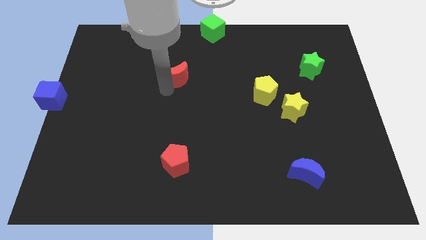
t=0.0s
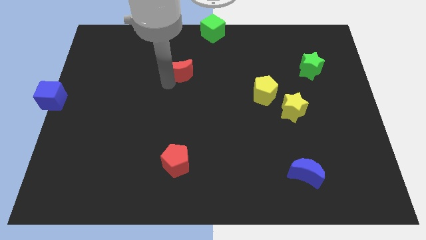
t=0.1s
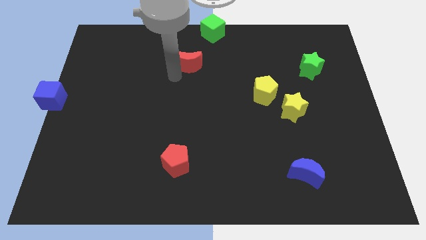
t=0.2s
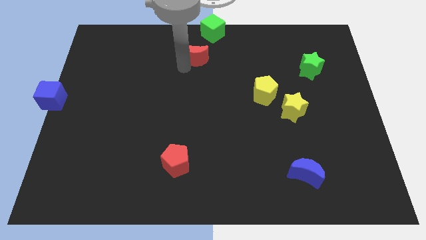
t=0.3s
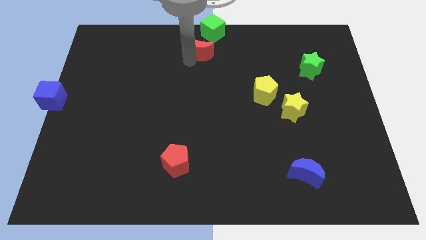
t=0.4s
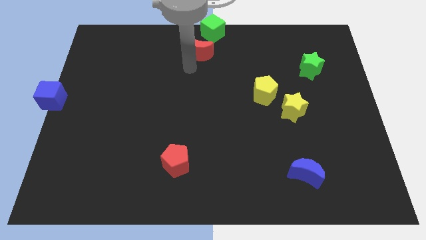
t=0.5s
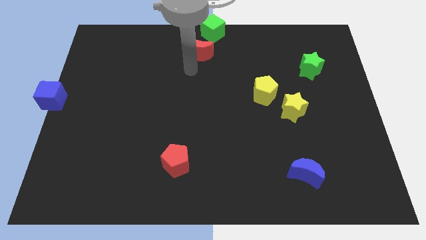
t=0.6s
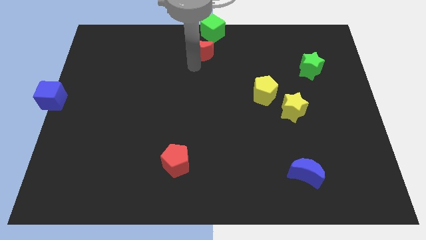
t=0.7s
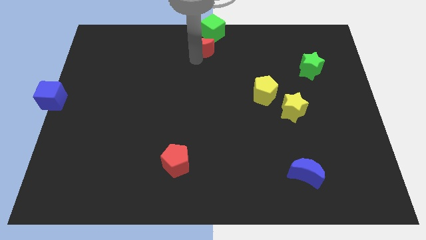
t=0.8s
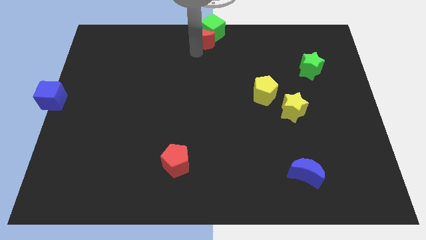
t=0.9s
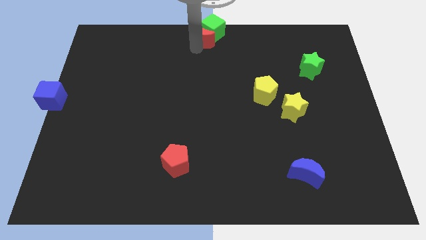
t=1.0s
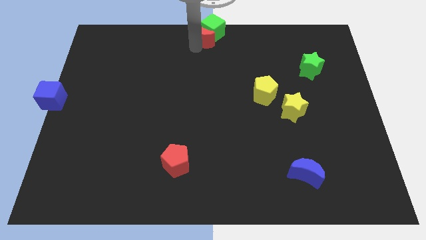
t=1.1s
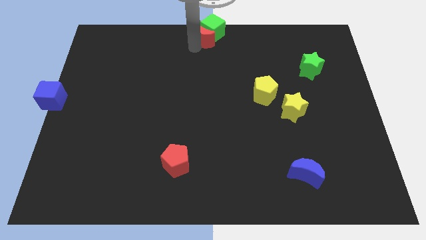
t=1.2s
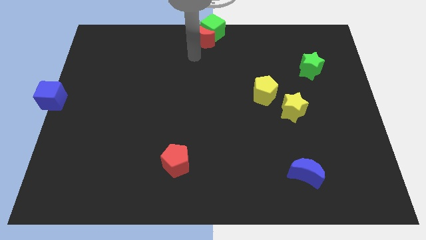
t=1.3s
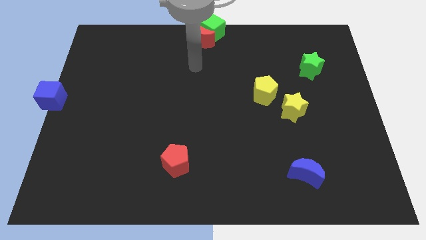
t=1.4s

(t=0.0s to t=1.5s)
move the red crescent into the green cube

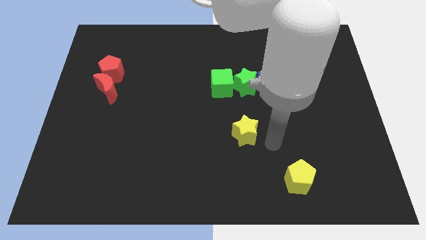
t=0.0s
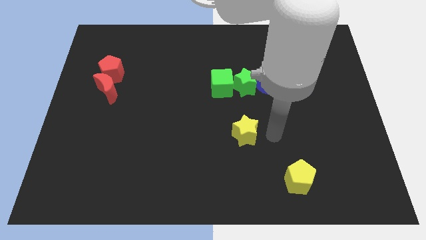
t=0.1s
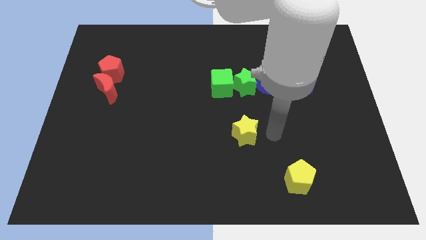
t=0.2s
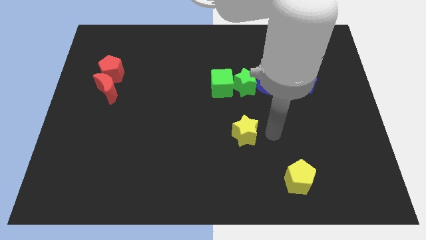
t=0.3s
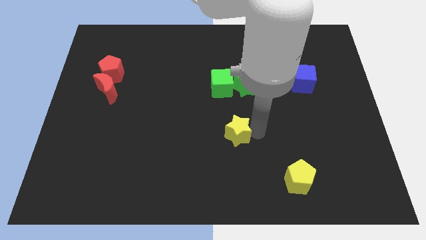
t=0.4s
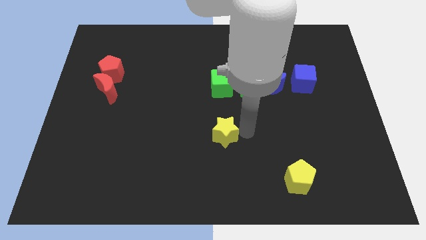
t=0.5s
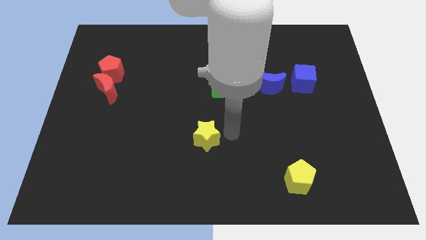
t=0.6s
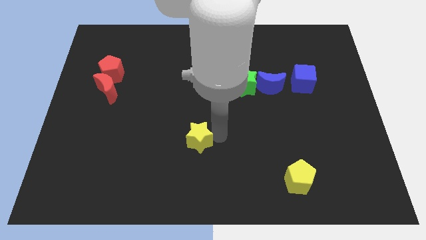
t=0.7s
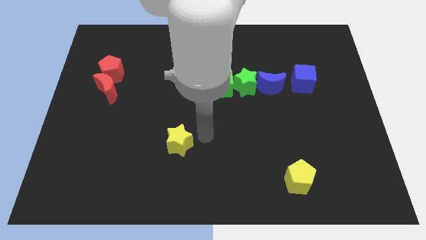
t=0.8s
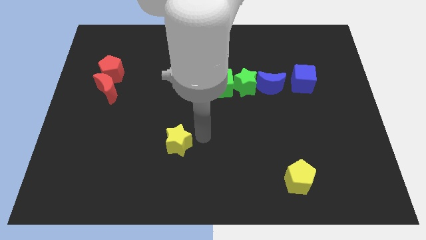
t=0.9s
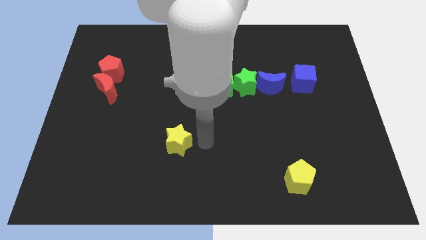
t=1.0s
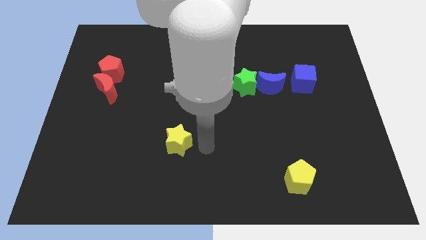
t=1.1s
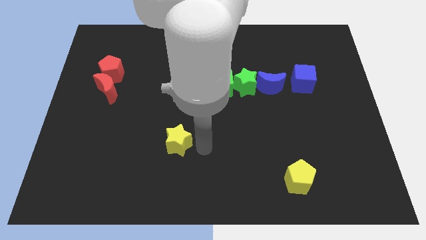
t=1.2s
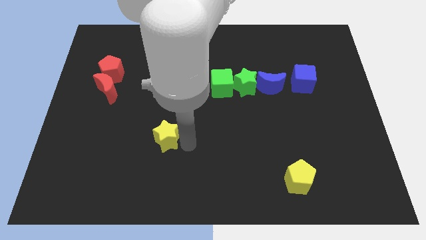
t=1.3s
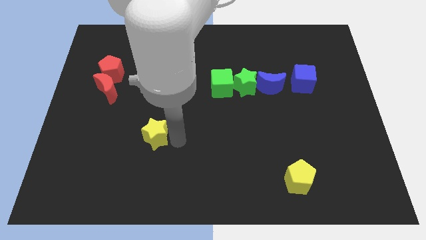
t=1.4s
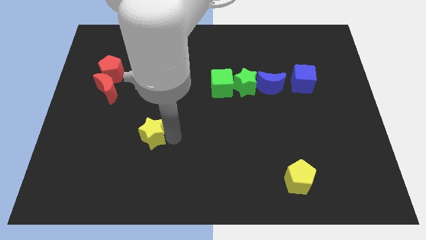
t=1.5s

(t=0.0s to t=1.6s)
move the yellow star to the left side of the board

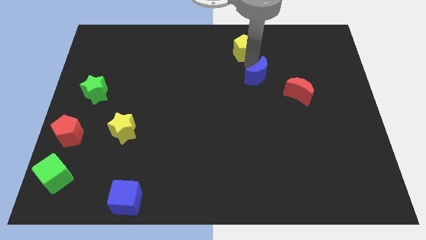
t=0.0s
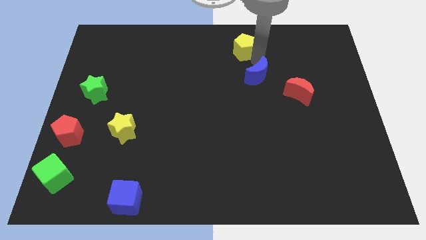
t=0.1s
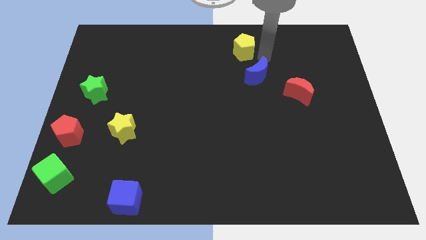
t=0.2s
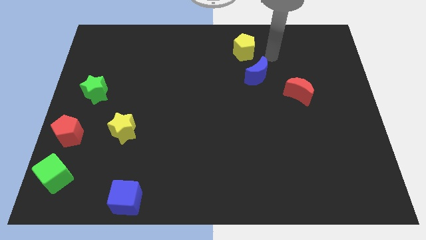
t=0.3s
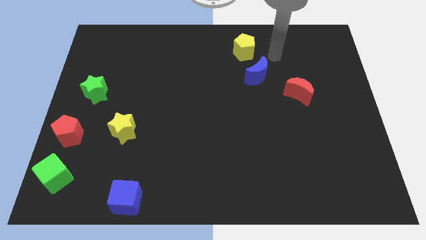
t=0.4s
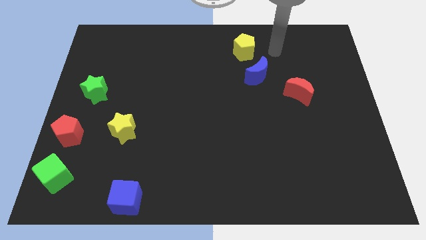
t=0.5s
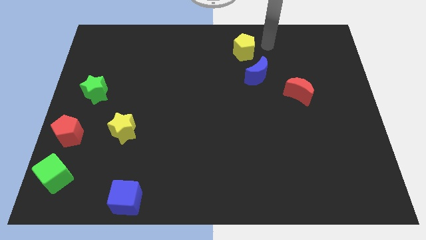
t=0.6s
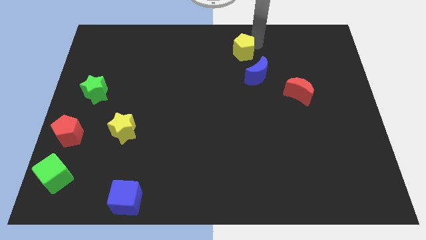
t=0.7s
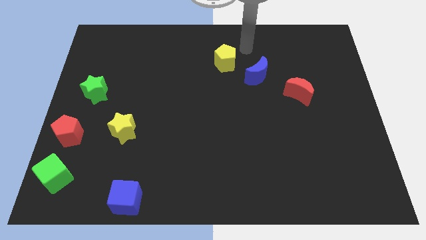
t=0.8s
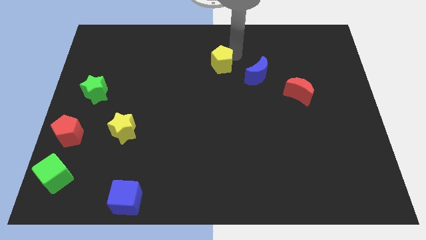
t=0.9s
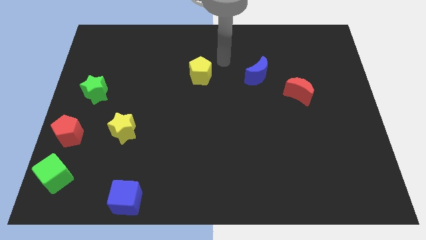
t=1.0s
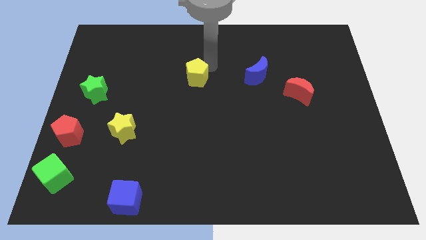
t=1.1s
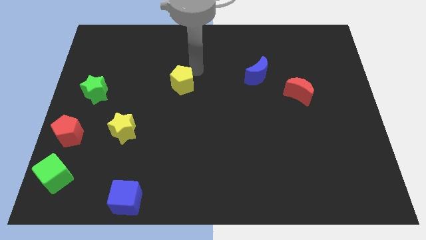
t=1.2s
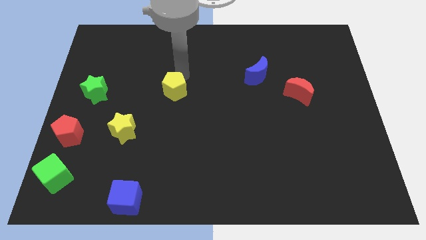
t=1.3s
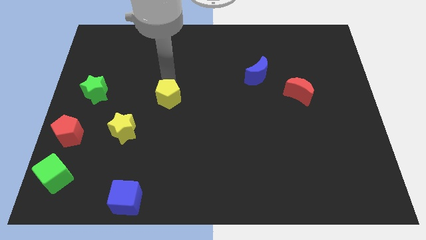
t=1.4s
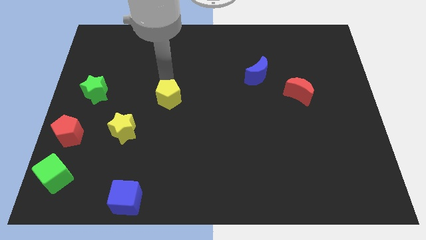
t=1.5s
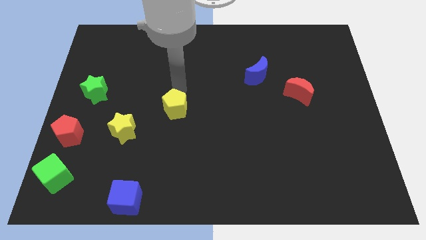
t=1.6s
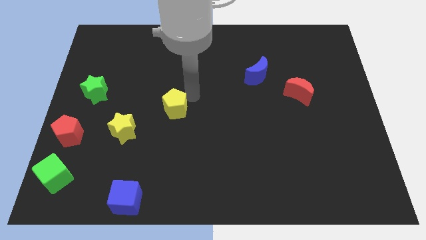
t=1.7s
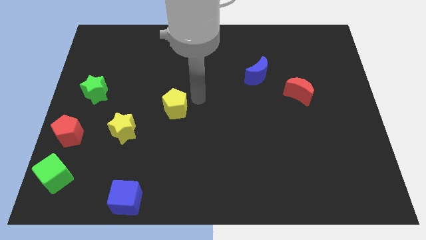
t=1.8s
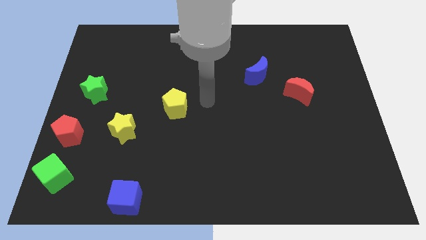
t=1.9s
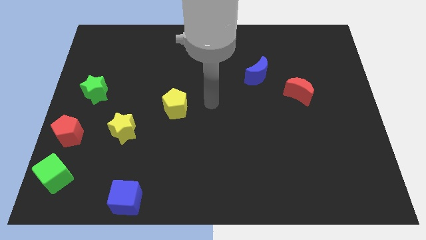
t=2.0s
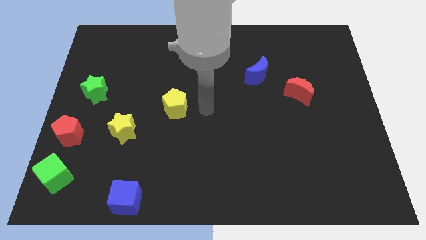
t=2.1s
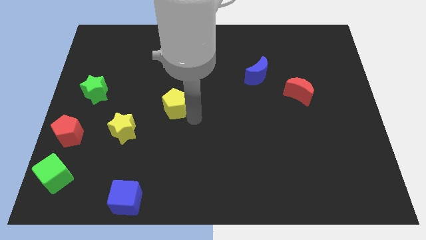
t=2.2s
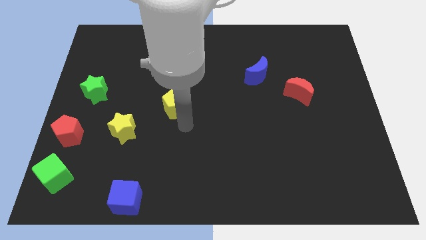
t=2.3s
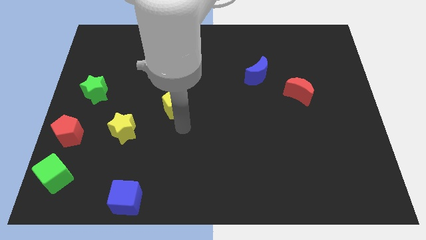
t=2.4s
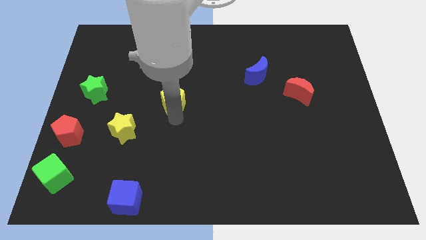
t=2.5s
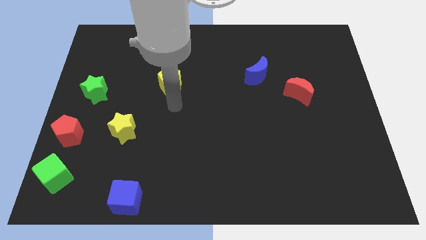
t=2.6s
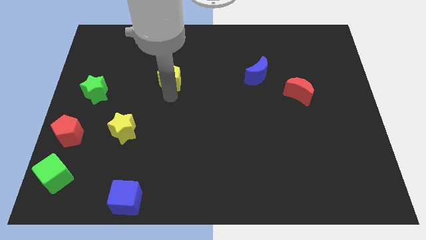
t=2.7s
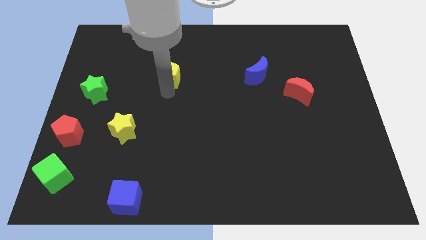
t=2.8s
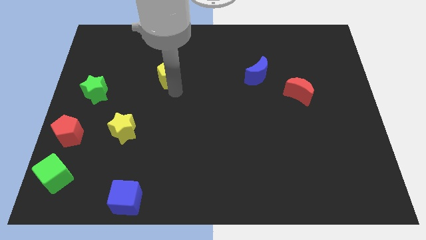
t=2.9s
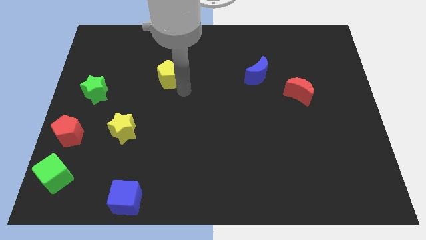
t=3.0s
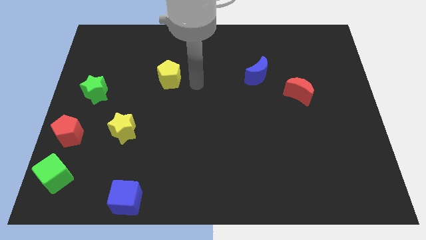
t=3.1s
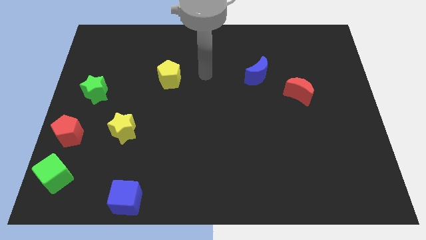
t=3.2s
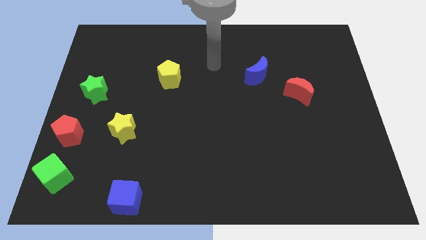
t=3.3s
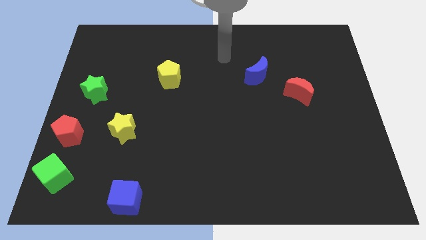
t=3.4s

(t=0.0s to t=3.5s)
move the yellow pentagon parallel to the right of the green star

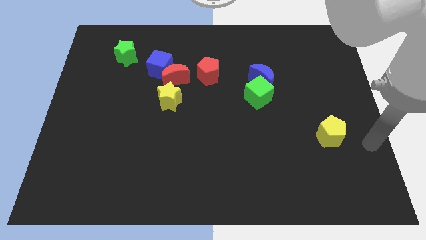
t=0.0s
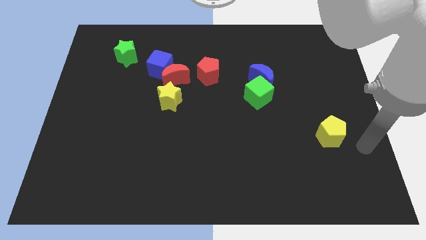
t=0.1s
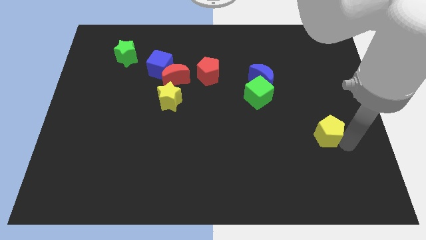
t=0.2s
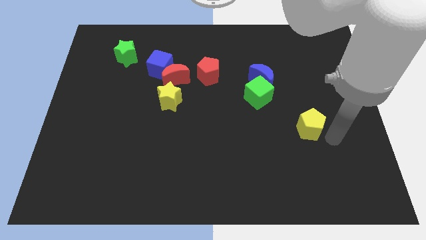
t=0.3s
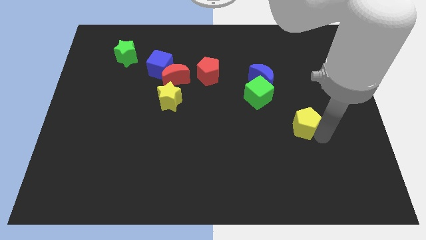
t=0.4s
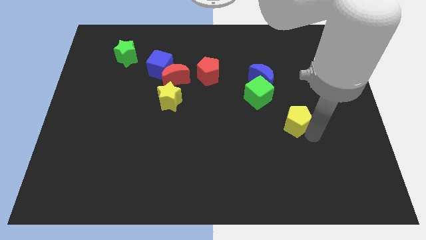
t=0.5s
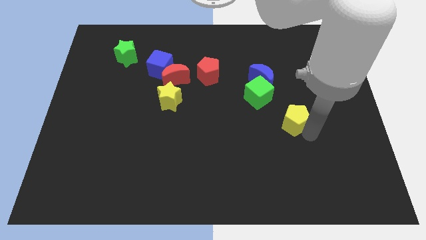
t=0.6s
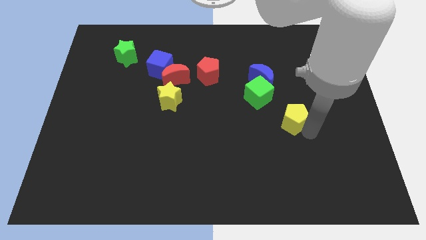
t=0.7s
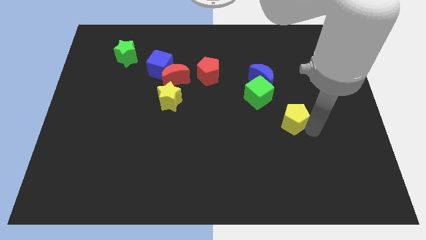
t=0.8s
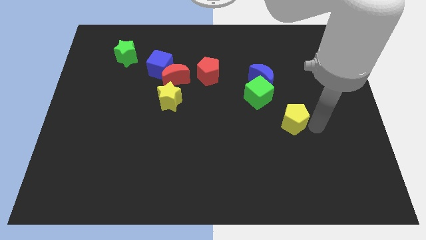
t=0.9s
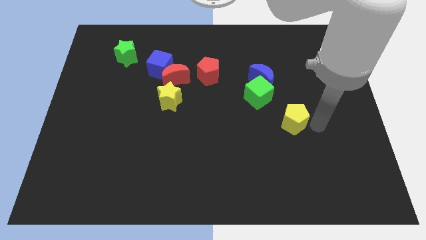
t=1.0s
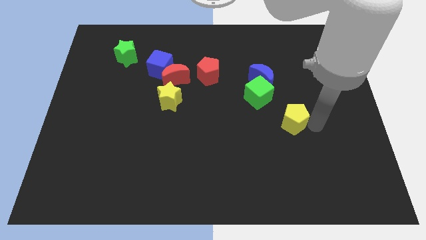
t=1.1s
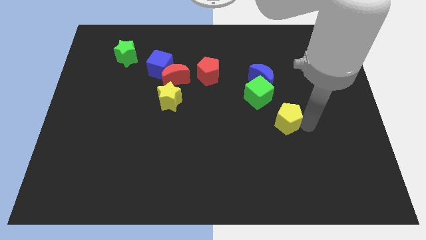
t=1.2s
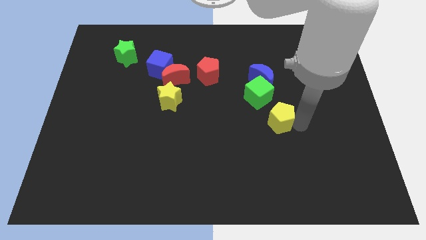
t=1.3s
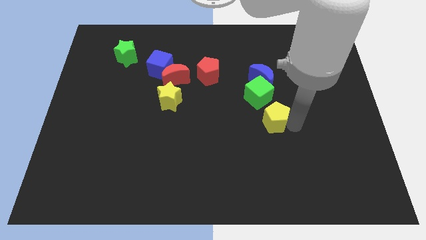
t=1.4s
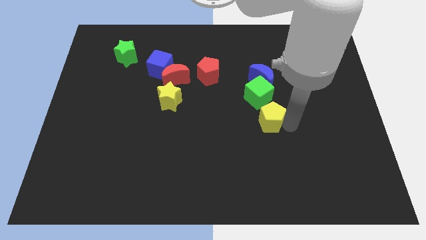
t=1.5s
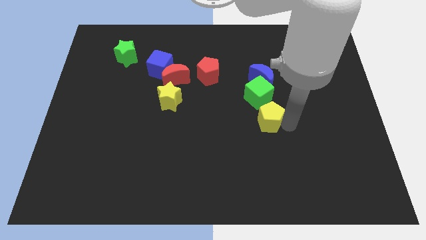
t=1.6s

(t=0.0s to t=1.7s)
move the yellow pentagon towards the green cube

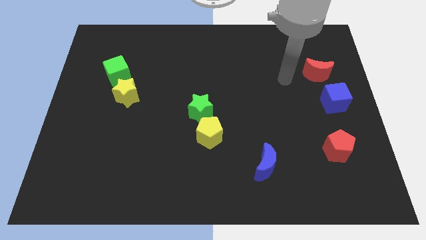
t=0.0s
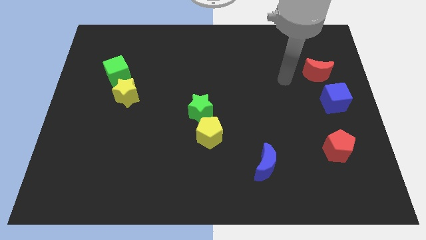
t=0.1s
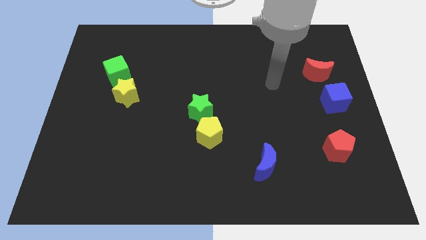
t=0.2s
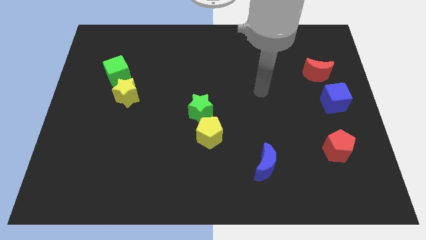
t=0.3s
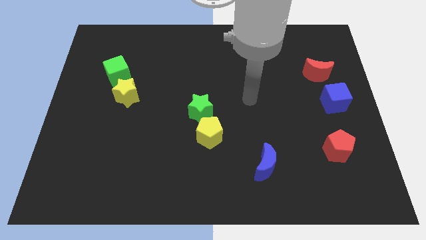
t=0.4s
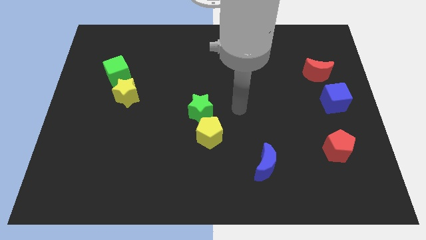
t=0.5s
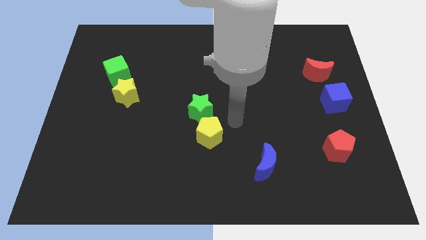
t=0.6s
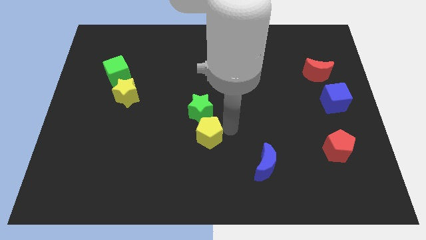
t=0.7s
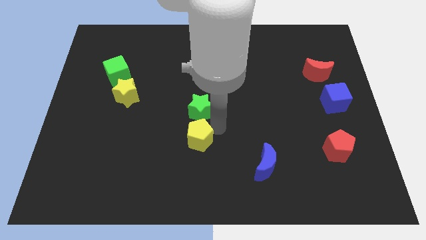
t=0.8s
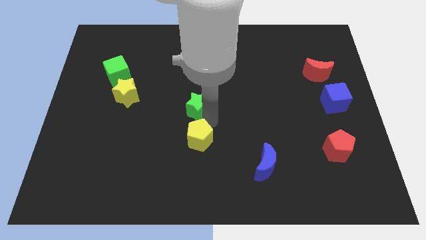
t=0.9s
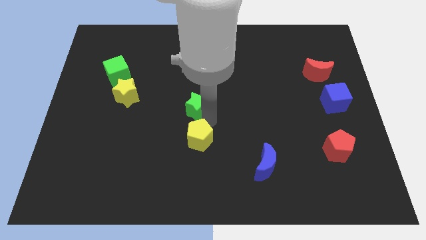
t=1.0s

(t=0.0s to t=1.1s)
move your arm on top of the yellow pentagon
